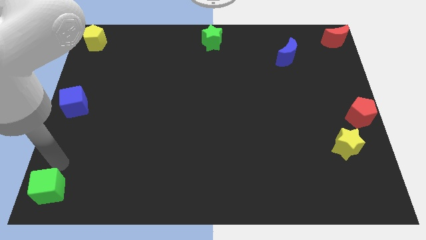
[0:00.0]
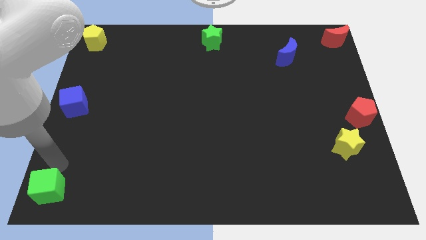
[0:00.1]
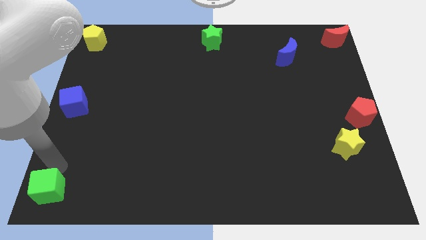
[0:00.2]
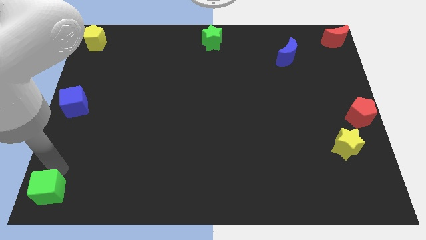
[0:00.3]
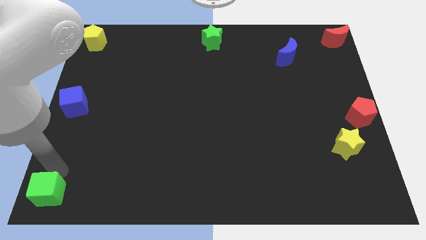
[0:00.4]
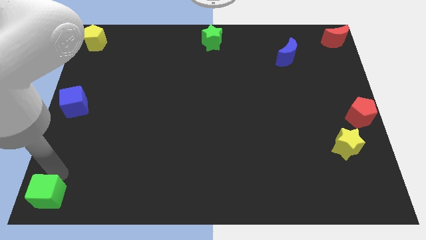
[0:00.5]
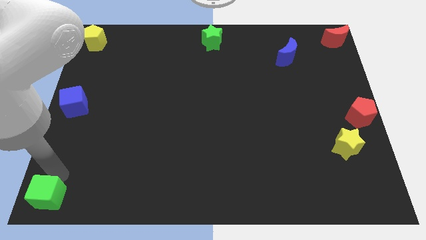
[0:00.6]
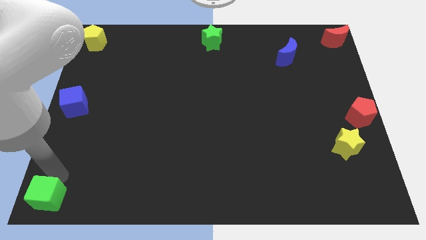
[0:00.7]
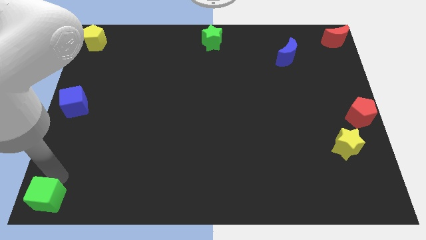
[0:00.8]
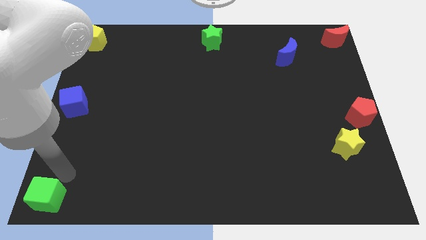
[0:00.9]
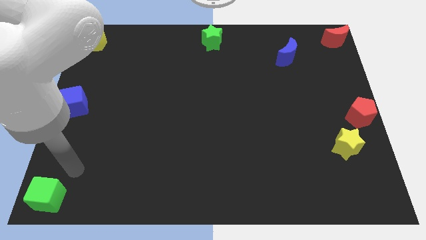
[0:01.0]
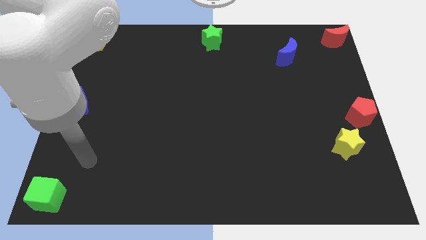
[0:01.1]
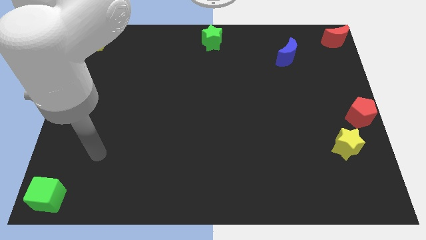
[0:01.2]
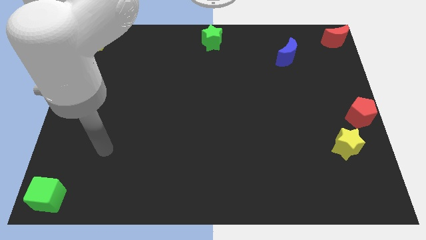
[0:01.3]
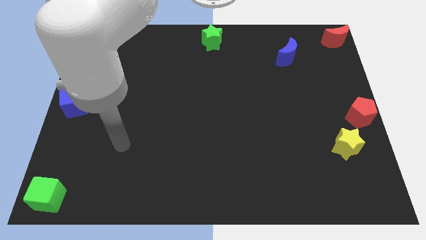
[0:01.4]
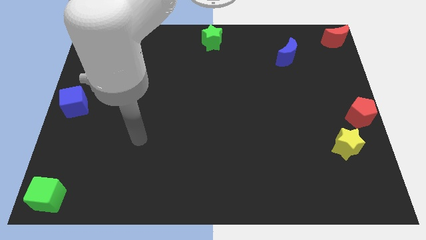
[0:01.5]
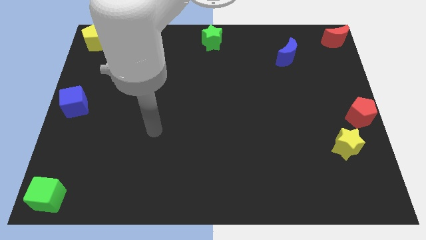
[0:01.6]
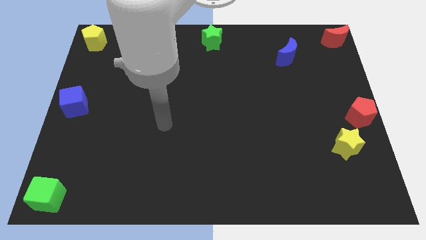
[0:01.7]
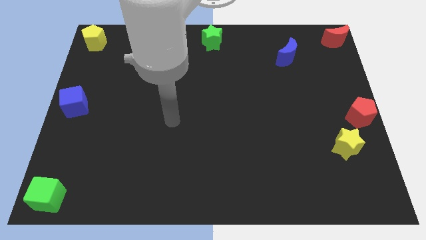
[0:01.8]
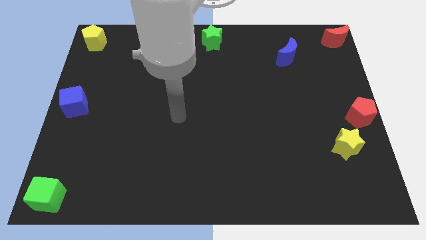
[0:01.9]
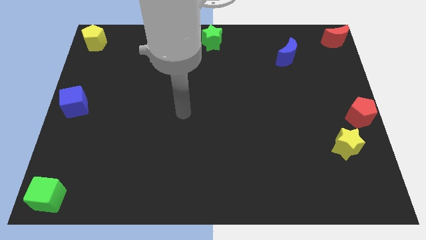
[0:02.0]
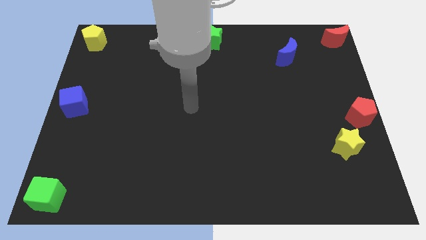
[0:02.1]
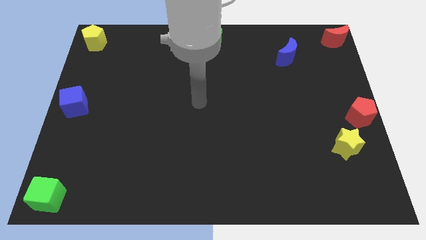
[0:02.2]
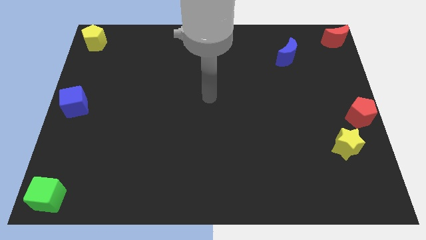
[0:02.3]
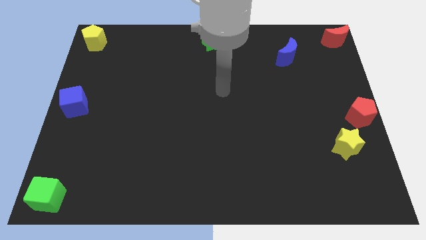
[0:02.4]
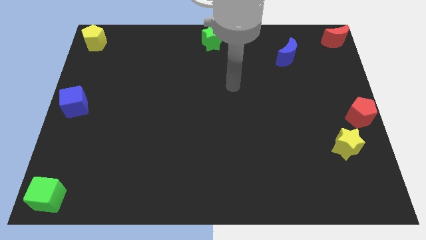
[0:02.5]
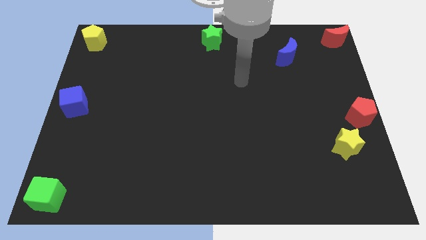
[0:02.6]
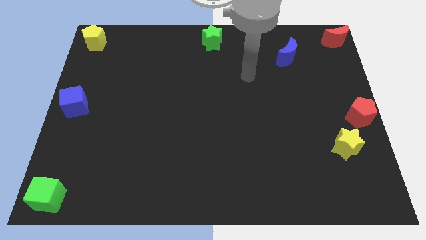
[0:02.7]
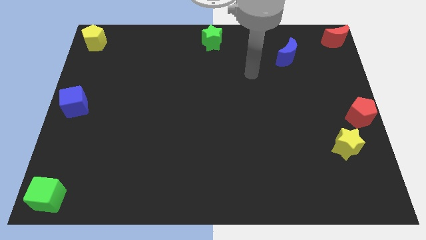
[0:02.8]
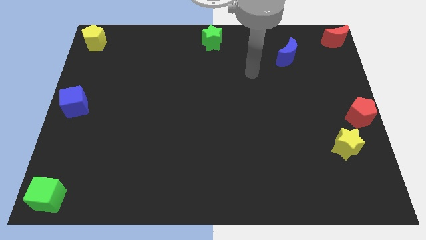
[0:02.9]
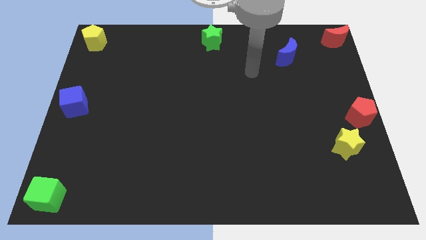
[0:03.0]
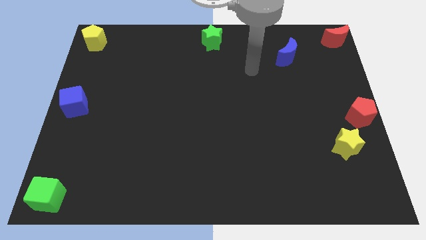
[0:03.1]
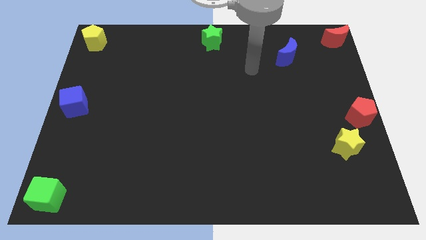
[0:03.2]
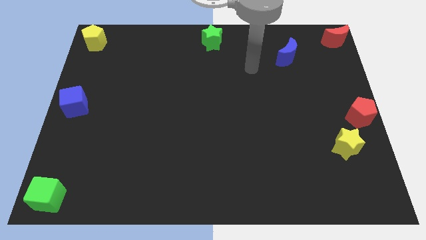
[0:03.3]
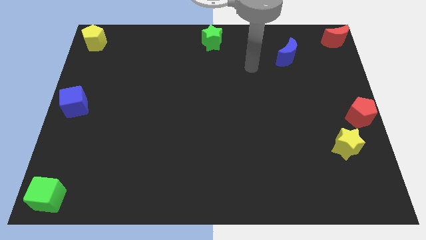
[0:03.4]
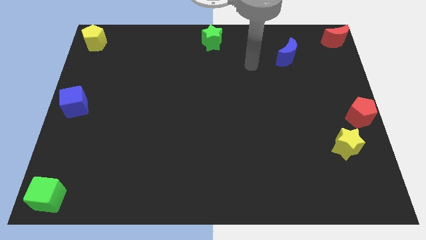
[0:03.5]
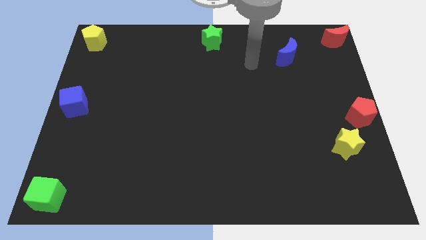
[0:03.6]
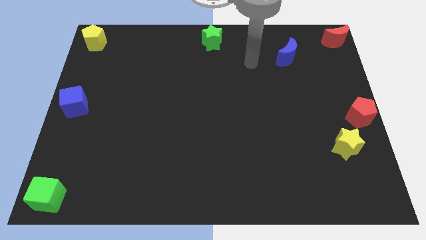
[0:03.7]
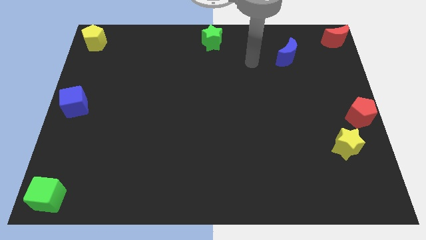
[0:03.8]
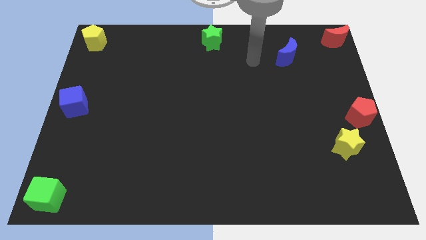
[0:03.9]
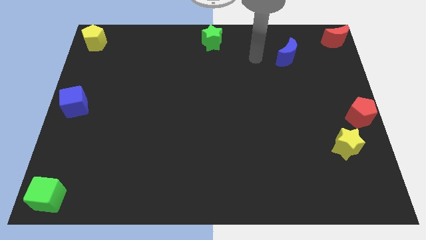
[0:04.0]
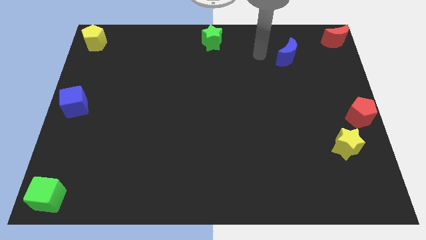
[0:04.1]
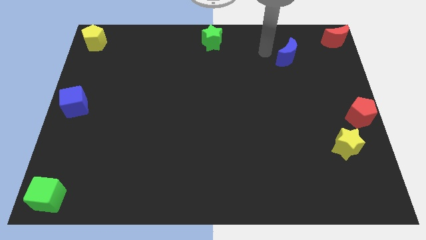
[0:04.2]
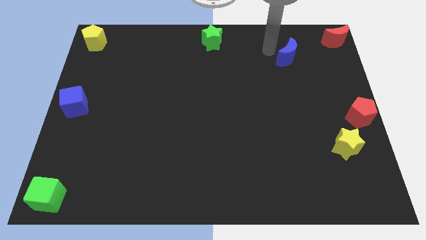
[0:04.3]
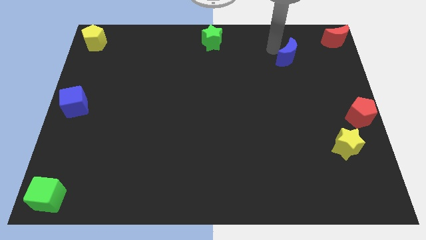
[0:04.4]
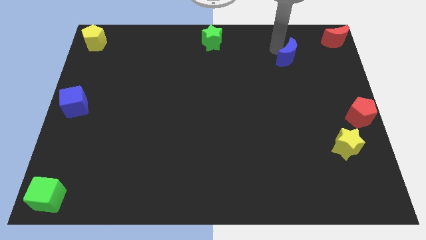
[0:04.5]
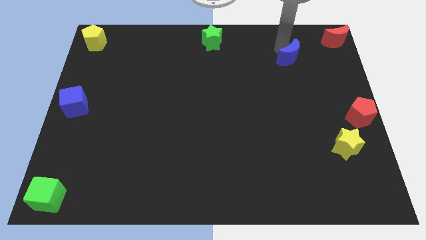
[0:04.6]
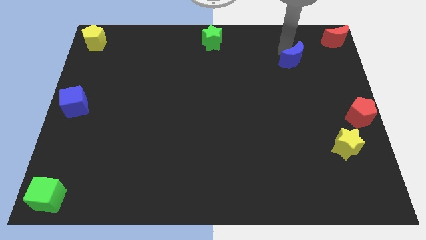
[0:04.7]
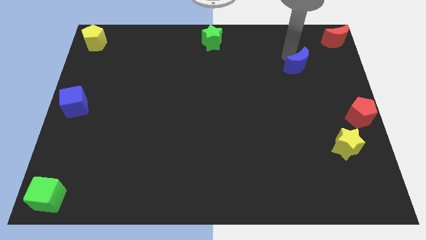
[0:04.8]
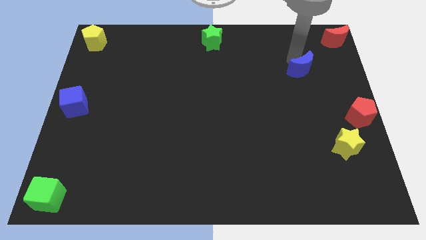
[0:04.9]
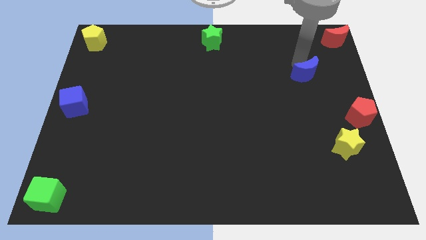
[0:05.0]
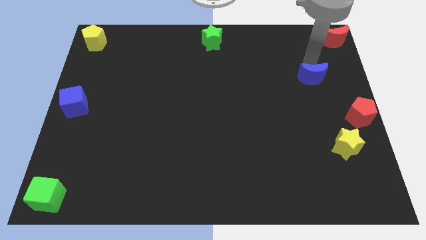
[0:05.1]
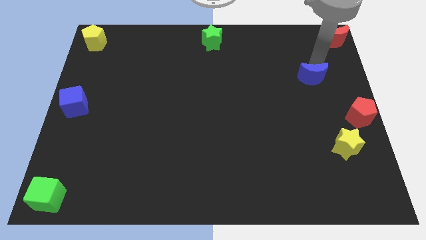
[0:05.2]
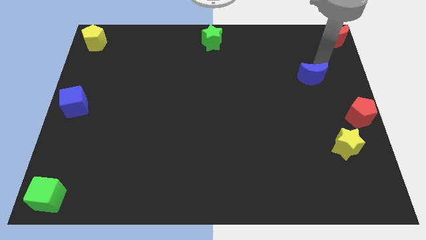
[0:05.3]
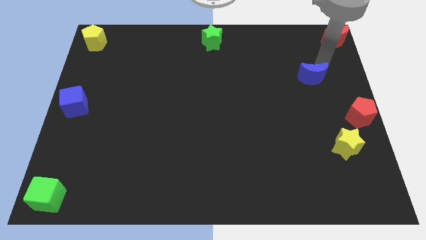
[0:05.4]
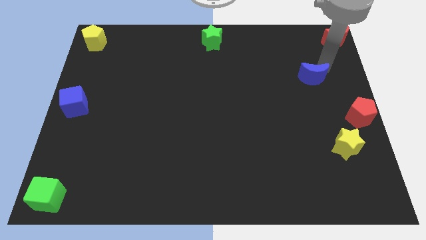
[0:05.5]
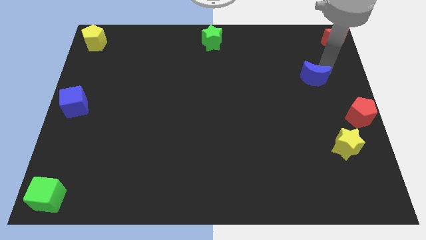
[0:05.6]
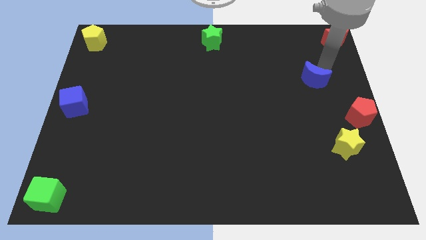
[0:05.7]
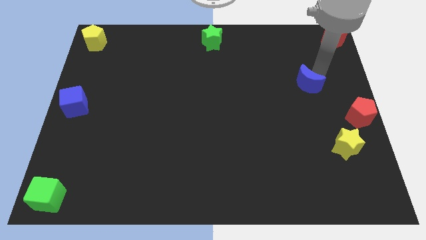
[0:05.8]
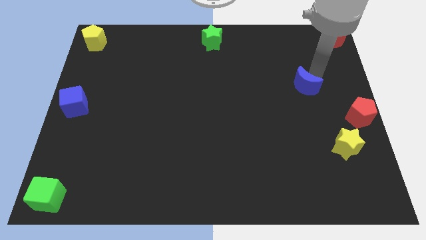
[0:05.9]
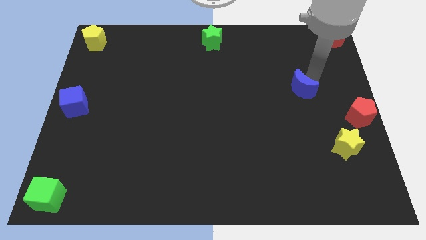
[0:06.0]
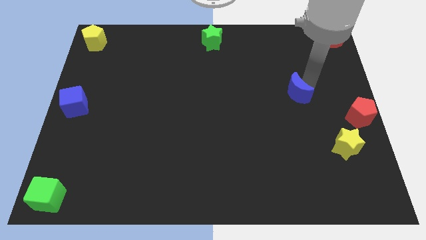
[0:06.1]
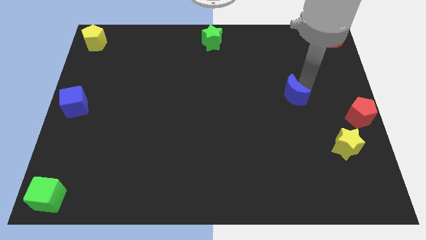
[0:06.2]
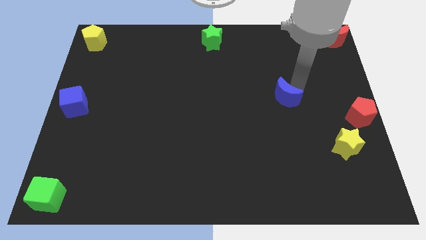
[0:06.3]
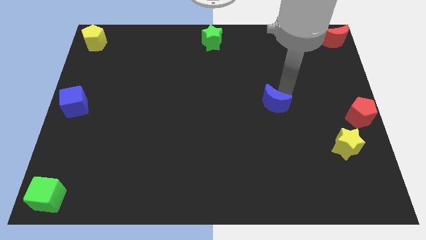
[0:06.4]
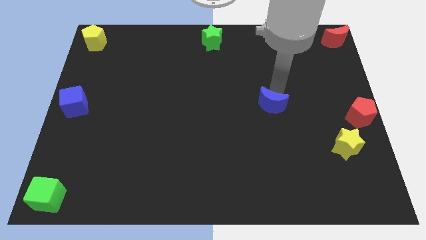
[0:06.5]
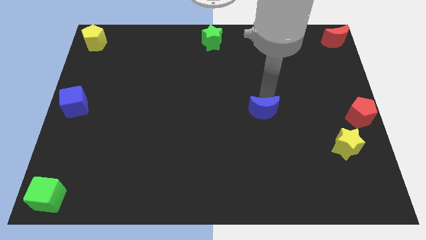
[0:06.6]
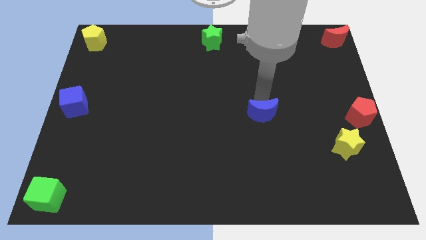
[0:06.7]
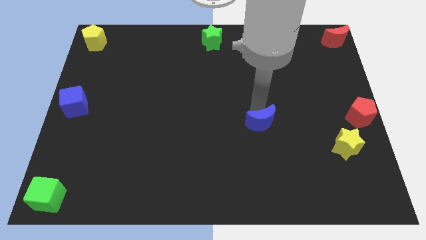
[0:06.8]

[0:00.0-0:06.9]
place the blue crescent to the left of the red pentagon

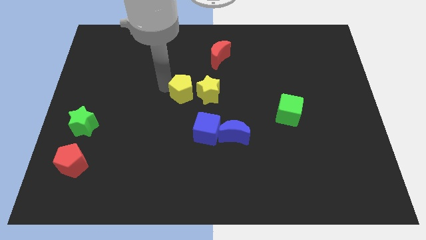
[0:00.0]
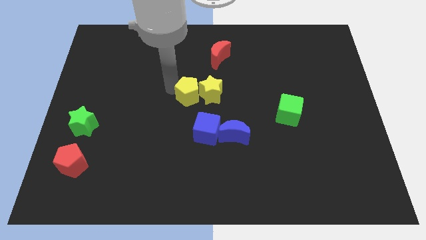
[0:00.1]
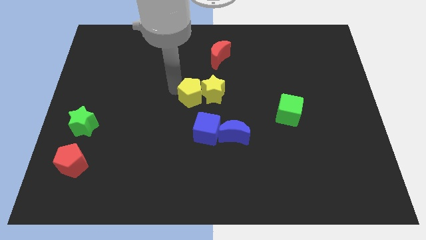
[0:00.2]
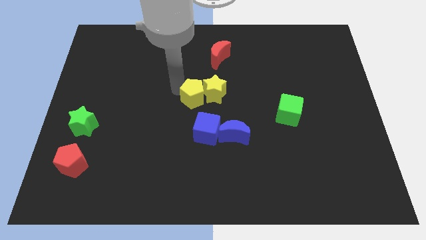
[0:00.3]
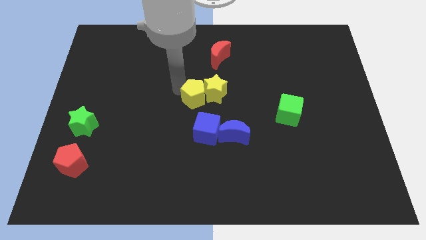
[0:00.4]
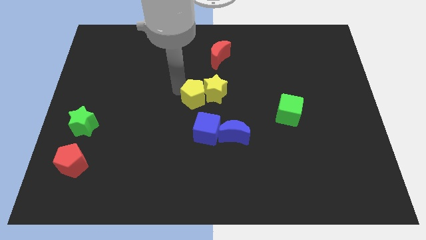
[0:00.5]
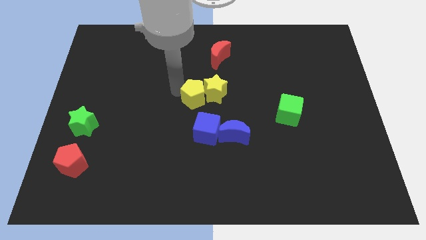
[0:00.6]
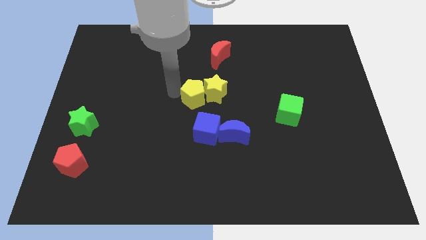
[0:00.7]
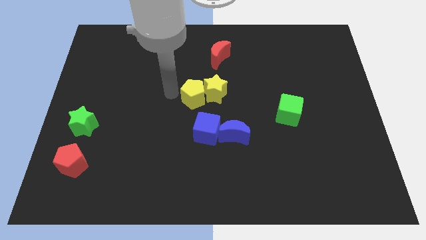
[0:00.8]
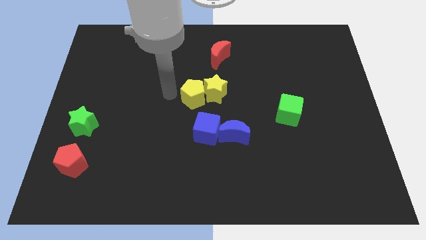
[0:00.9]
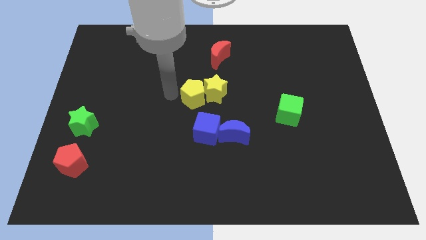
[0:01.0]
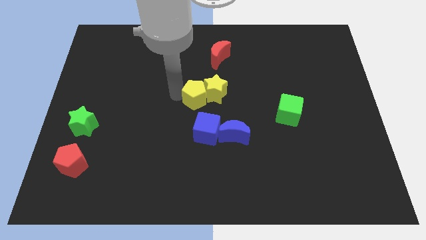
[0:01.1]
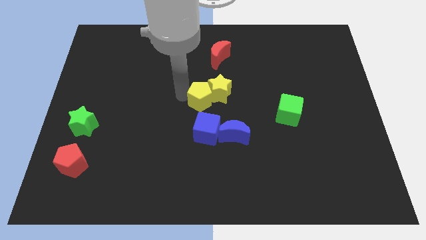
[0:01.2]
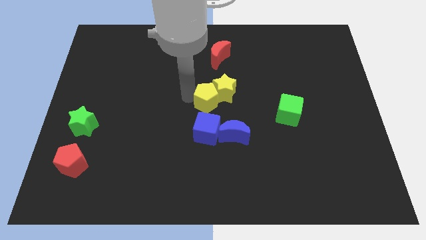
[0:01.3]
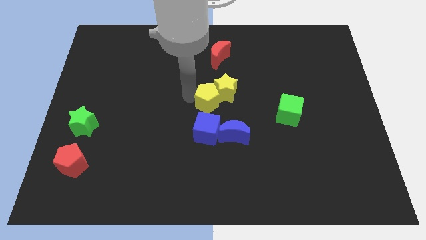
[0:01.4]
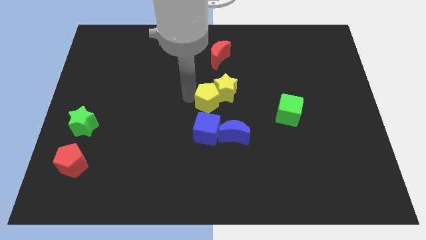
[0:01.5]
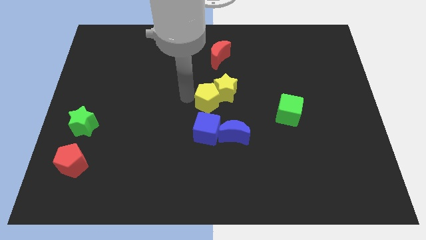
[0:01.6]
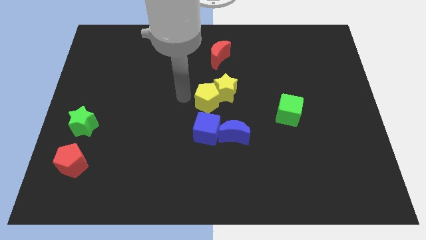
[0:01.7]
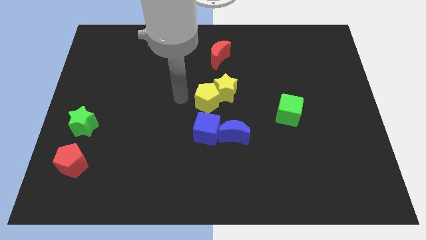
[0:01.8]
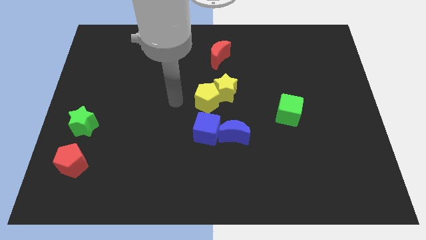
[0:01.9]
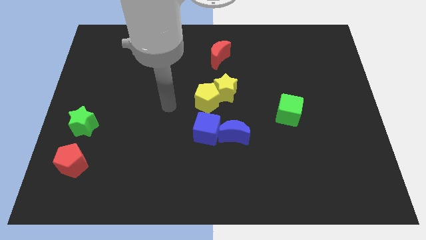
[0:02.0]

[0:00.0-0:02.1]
push the yellow blocks on top of blue blocks
